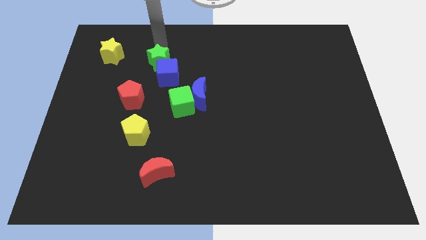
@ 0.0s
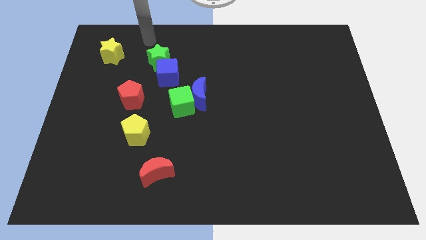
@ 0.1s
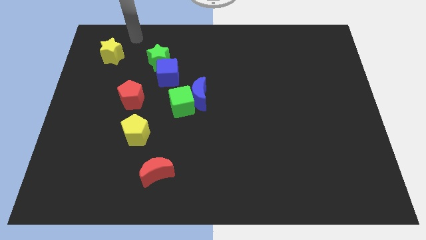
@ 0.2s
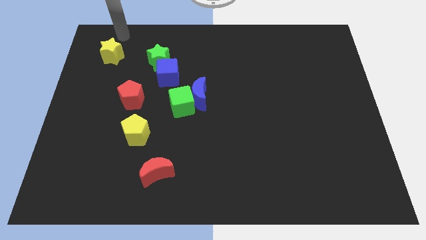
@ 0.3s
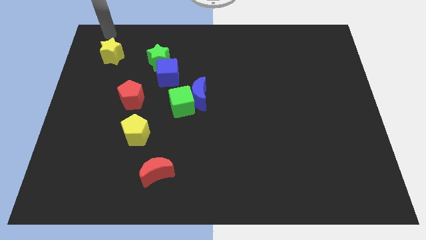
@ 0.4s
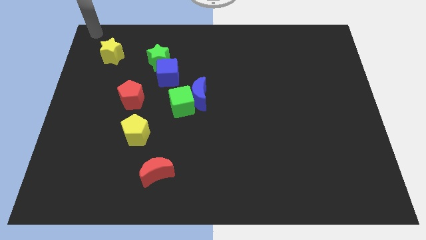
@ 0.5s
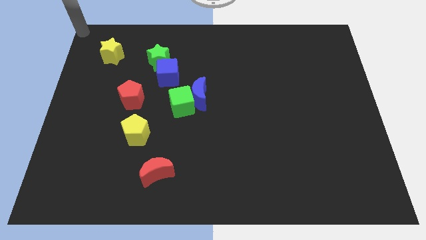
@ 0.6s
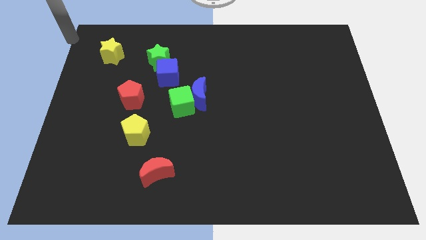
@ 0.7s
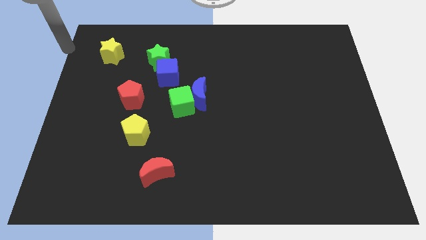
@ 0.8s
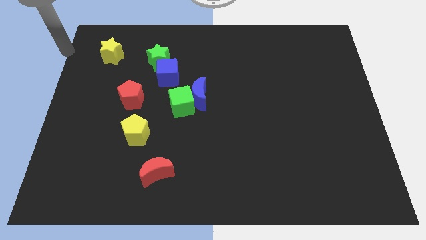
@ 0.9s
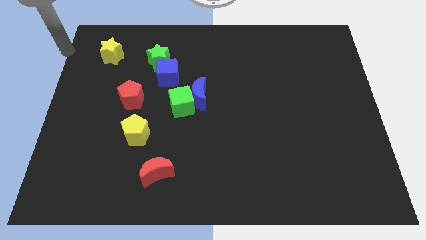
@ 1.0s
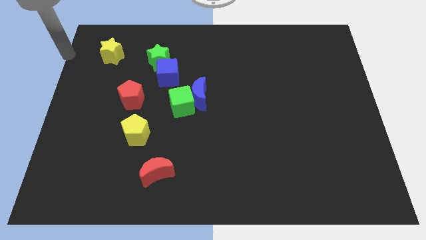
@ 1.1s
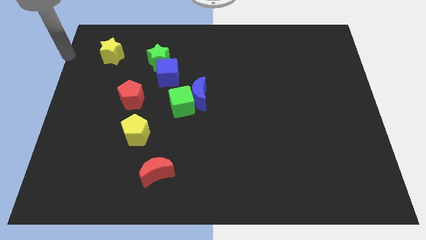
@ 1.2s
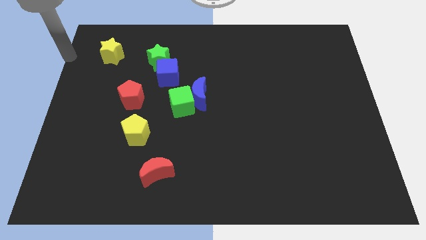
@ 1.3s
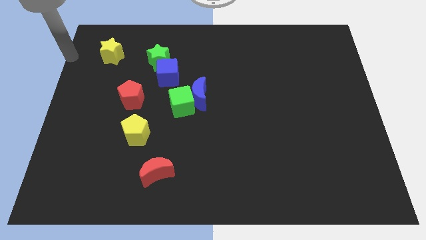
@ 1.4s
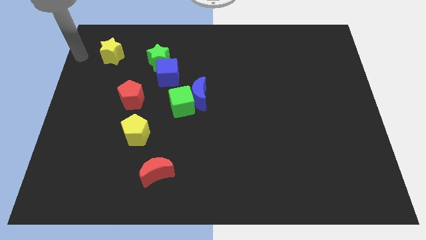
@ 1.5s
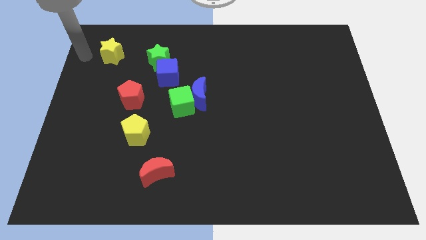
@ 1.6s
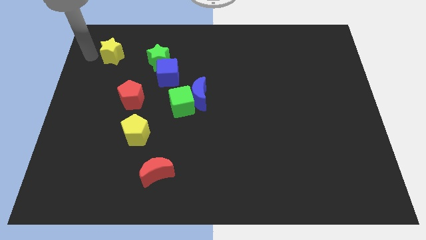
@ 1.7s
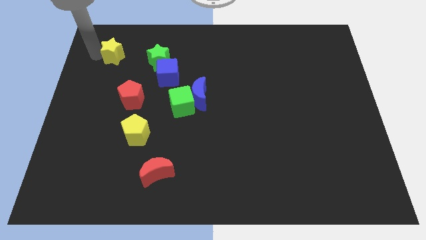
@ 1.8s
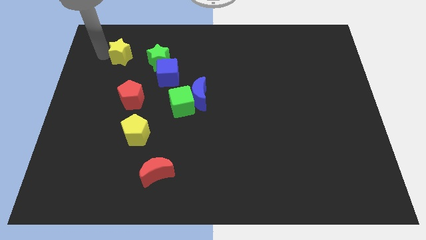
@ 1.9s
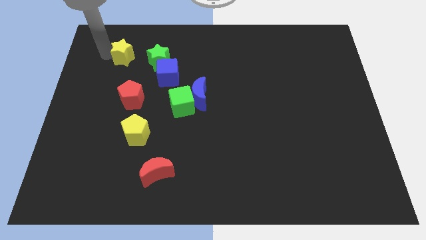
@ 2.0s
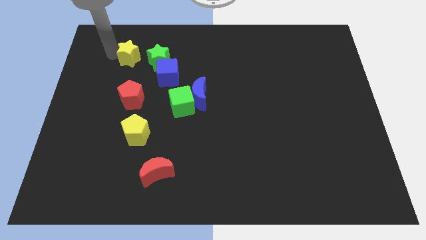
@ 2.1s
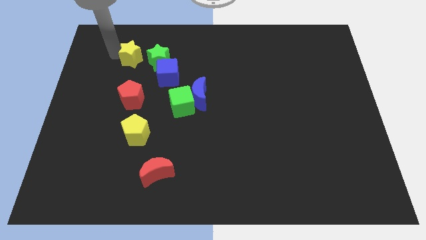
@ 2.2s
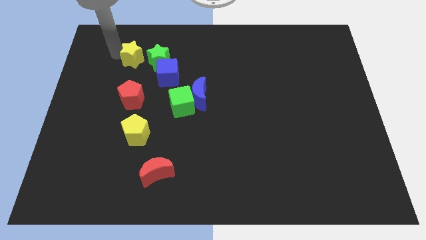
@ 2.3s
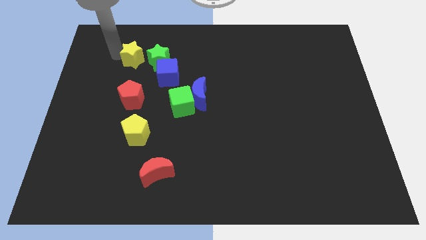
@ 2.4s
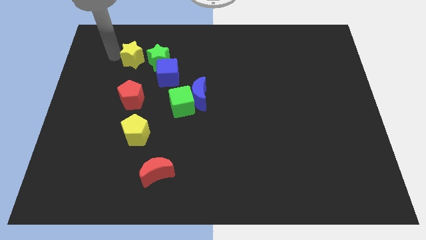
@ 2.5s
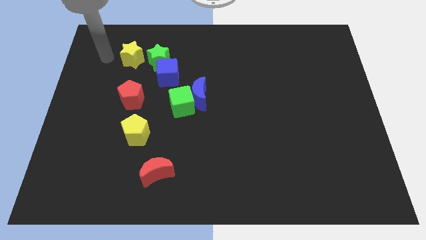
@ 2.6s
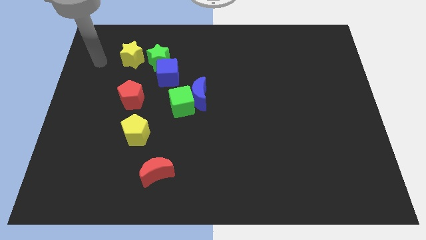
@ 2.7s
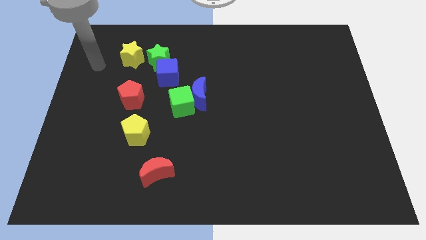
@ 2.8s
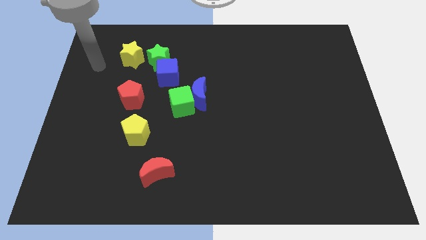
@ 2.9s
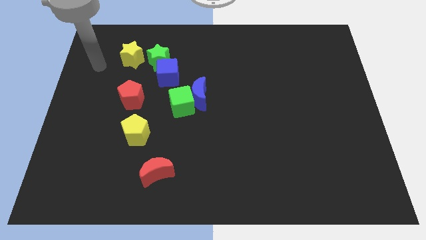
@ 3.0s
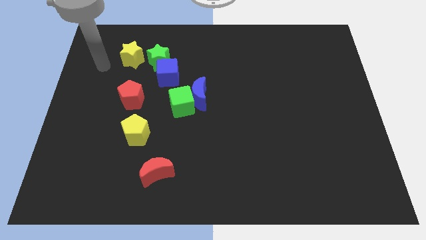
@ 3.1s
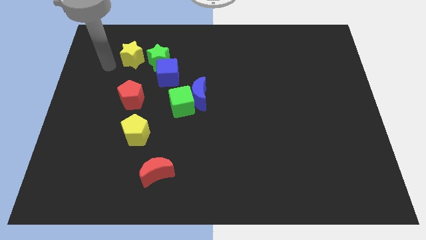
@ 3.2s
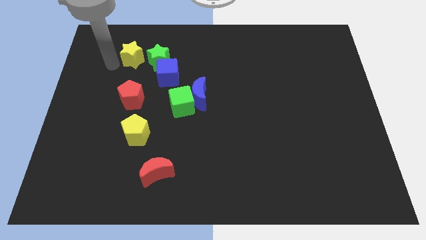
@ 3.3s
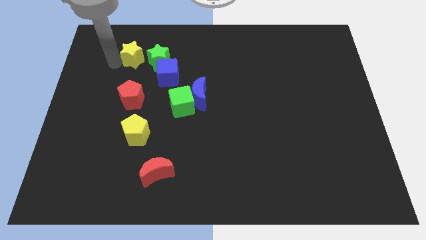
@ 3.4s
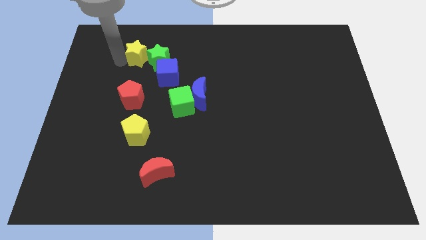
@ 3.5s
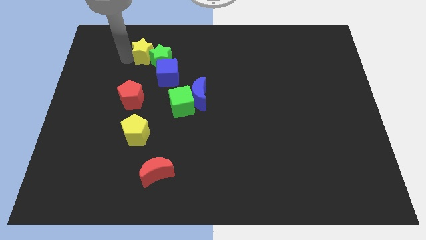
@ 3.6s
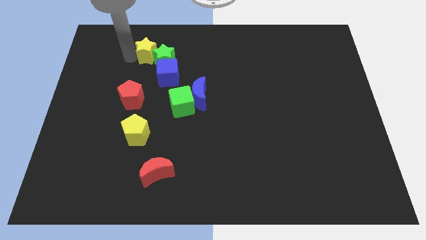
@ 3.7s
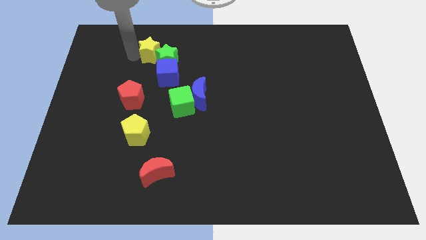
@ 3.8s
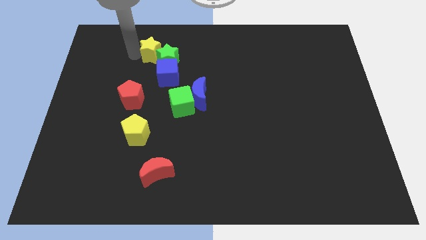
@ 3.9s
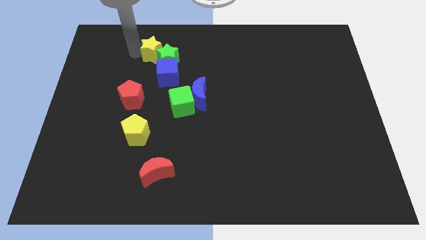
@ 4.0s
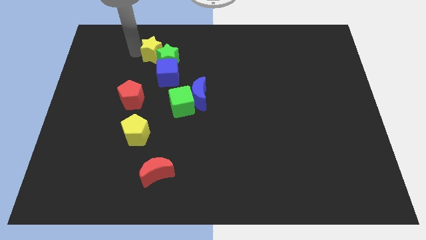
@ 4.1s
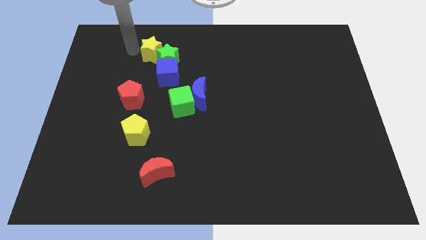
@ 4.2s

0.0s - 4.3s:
push the yellow star into the green star

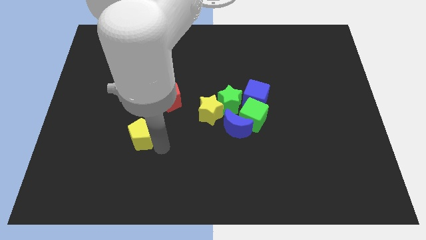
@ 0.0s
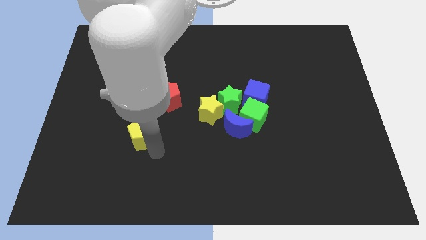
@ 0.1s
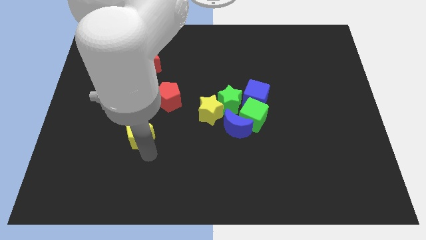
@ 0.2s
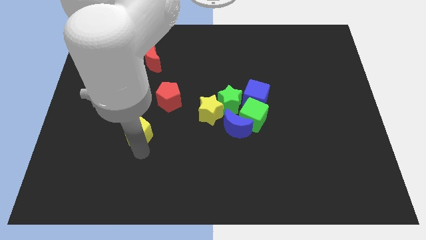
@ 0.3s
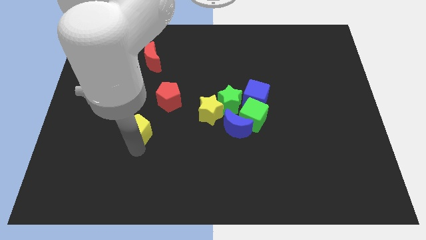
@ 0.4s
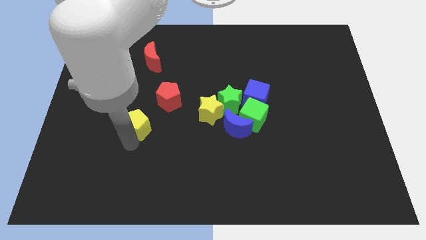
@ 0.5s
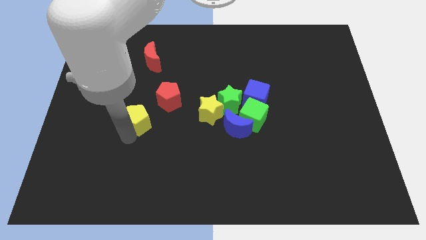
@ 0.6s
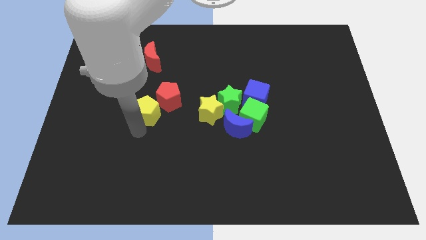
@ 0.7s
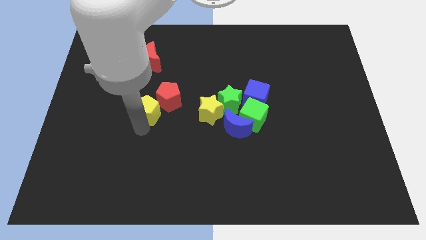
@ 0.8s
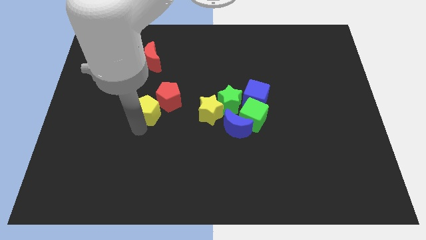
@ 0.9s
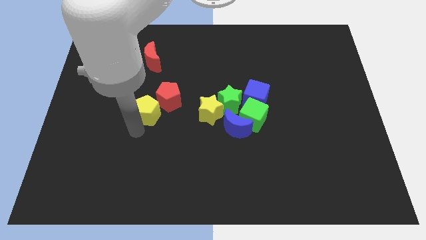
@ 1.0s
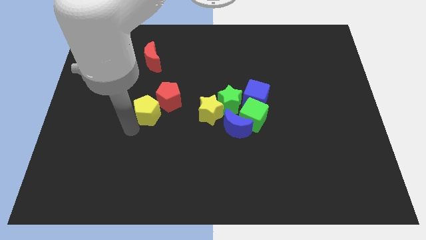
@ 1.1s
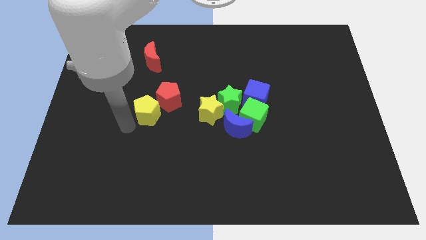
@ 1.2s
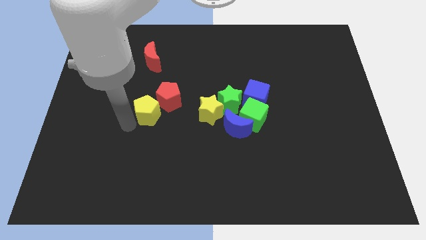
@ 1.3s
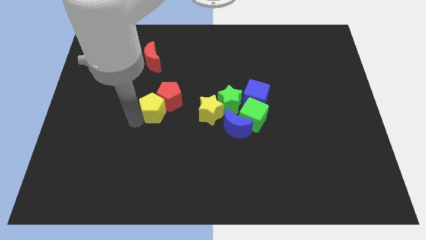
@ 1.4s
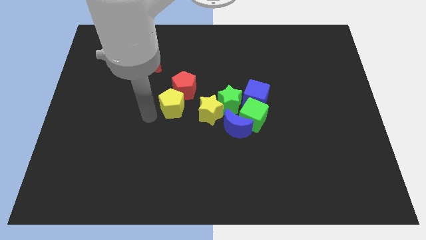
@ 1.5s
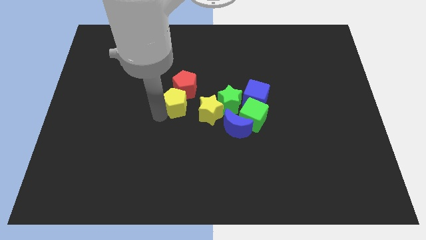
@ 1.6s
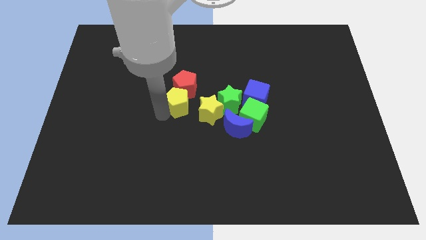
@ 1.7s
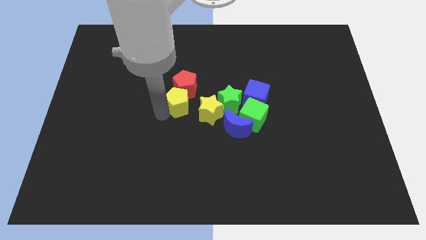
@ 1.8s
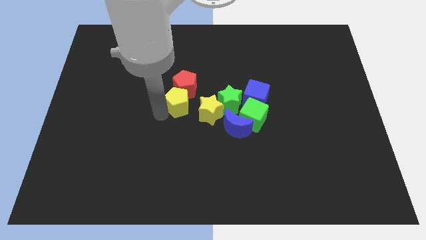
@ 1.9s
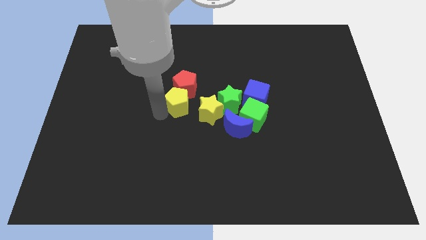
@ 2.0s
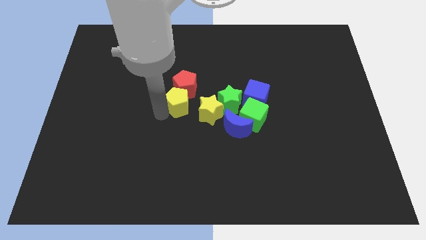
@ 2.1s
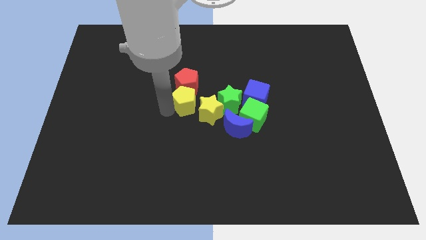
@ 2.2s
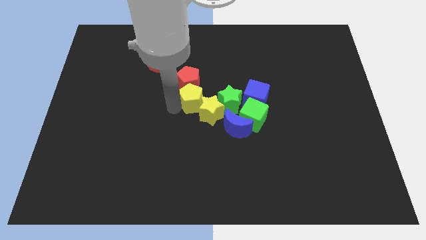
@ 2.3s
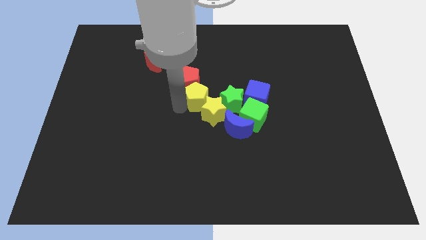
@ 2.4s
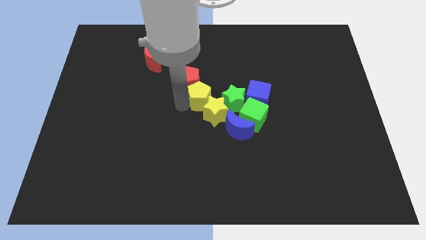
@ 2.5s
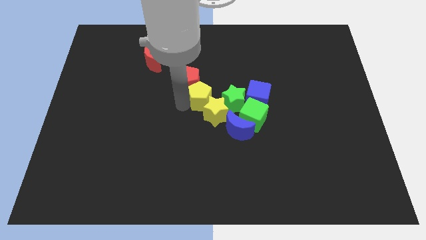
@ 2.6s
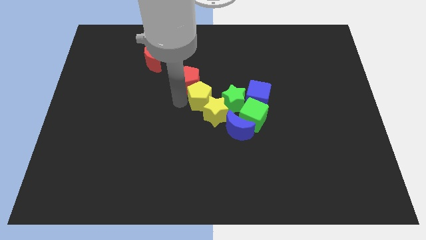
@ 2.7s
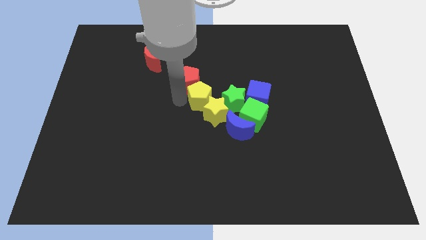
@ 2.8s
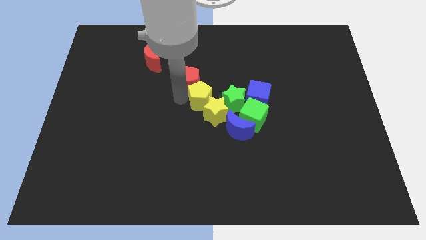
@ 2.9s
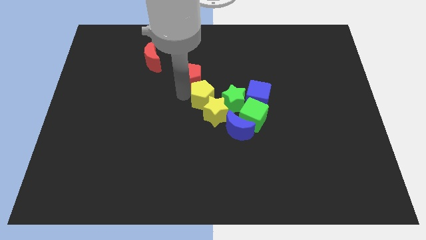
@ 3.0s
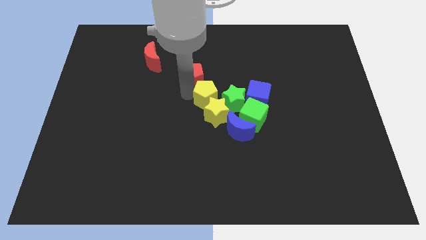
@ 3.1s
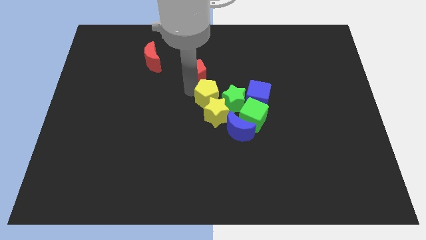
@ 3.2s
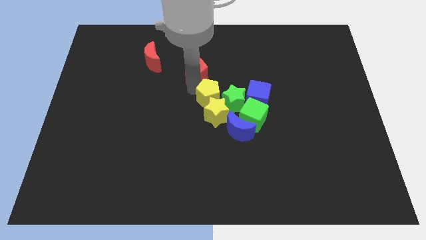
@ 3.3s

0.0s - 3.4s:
place the yellow pentagon above the yellow star

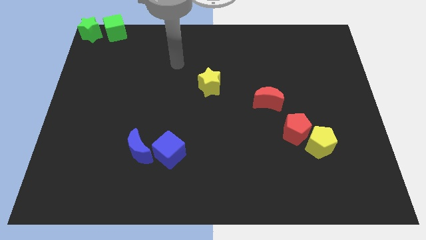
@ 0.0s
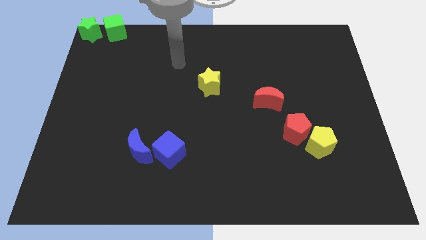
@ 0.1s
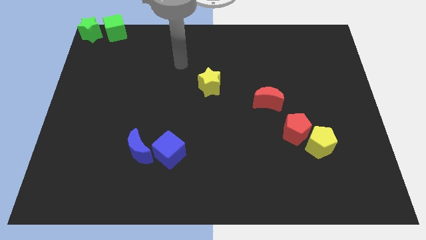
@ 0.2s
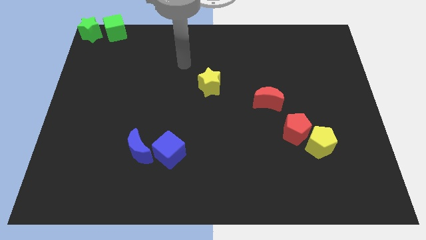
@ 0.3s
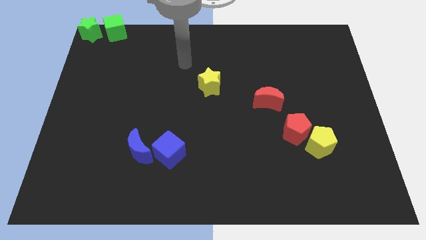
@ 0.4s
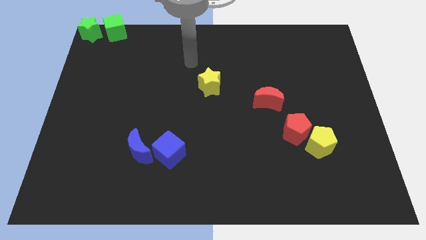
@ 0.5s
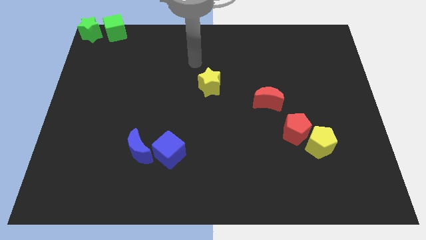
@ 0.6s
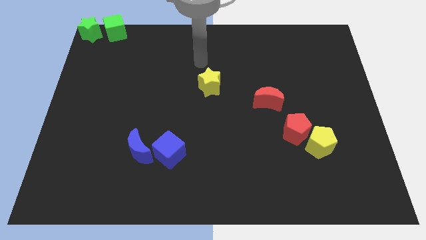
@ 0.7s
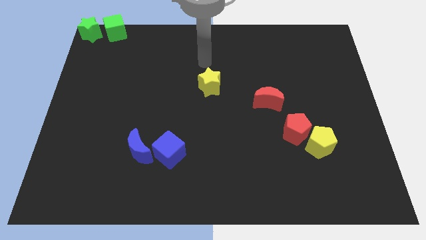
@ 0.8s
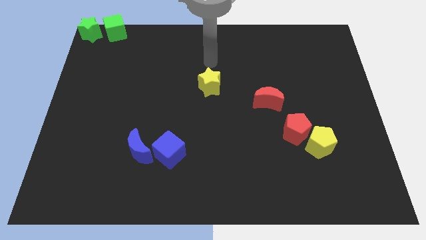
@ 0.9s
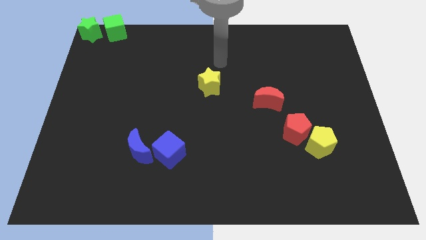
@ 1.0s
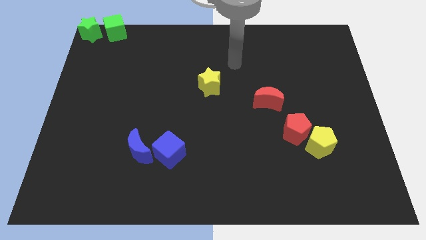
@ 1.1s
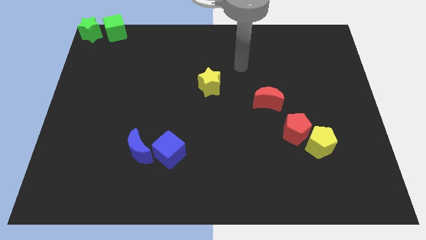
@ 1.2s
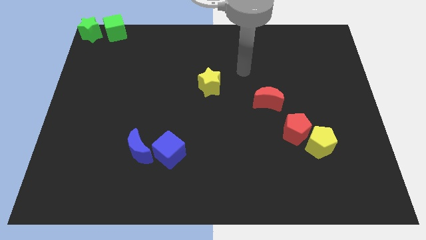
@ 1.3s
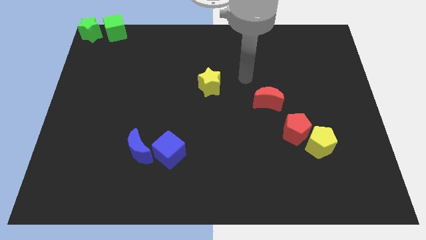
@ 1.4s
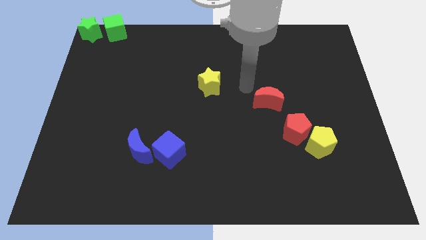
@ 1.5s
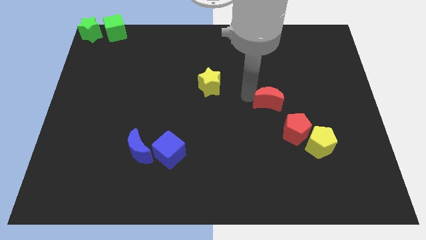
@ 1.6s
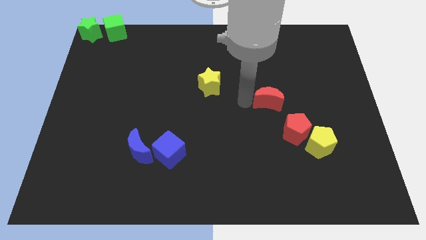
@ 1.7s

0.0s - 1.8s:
place your hand to the left of red moon
